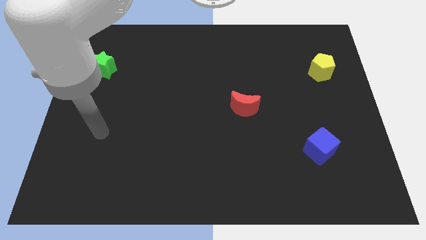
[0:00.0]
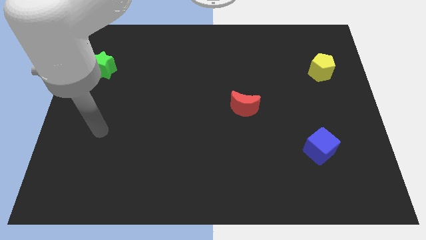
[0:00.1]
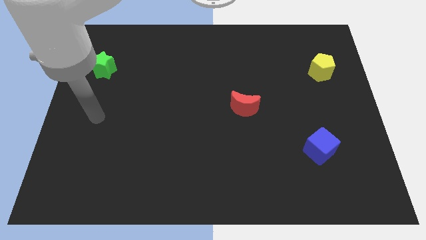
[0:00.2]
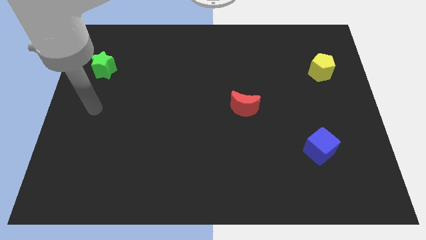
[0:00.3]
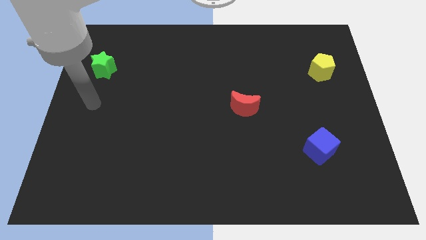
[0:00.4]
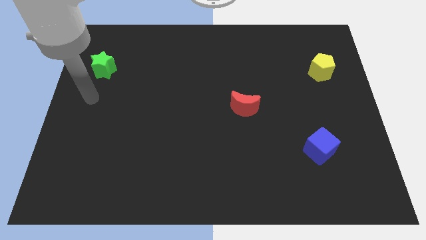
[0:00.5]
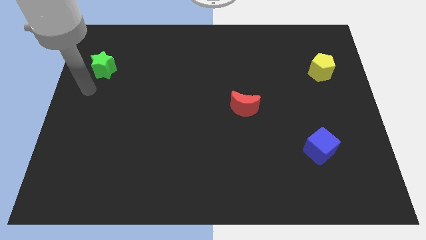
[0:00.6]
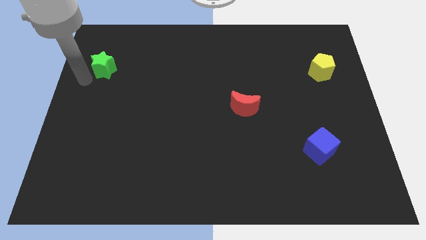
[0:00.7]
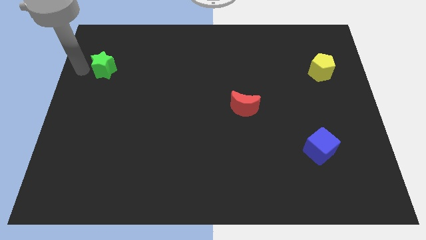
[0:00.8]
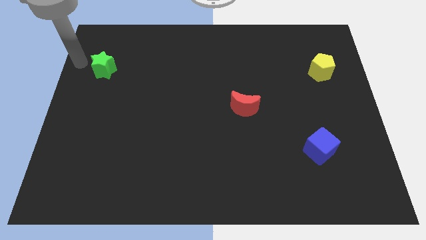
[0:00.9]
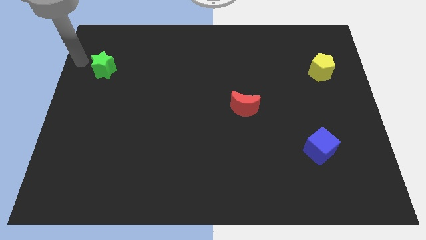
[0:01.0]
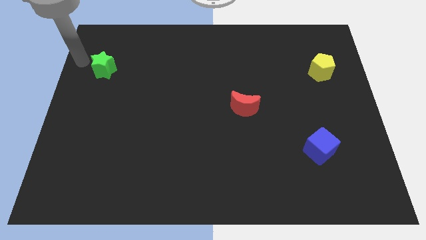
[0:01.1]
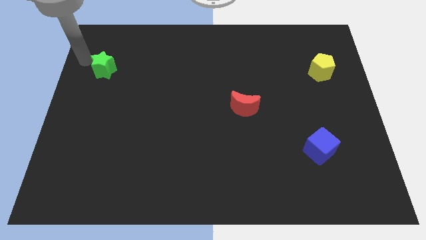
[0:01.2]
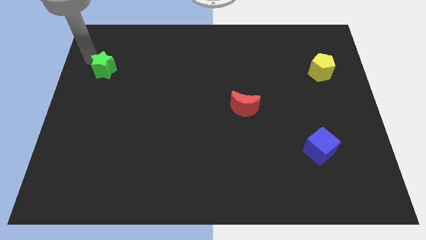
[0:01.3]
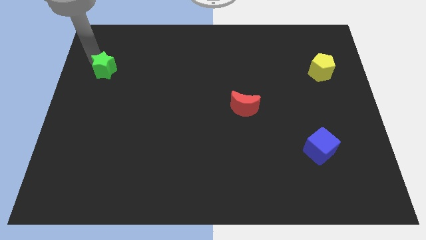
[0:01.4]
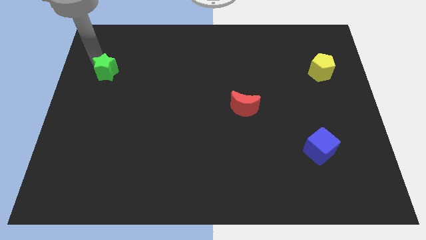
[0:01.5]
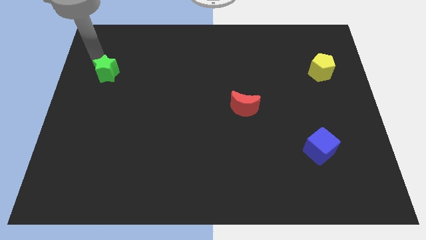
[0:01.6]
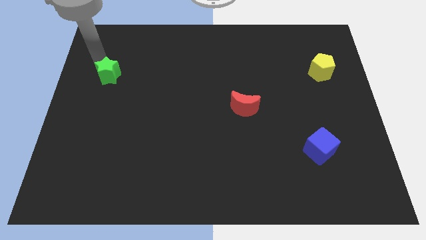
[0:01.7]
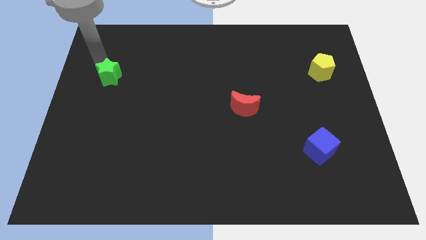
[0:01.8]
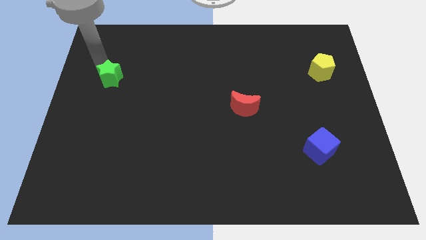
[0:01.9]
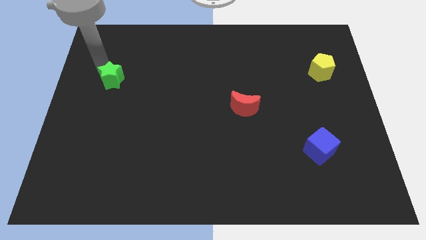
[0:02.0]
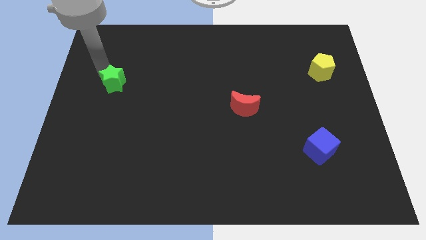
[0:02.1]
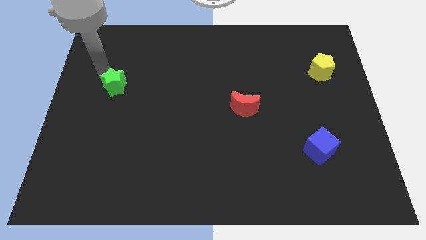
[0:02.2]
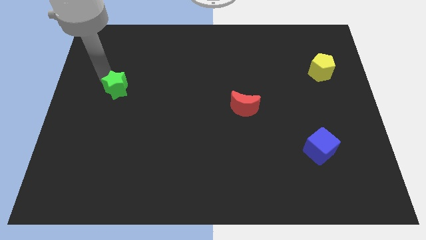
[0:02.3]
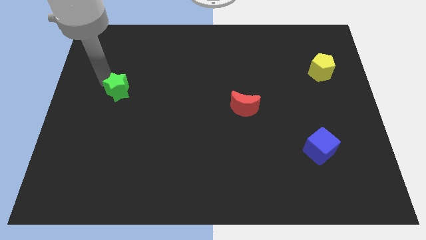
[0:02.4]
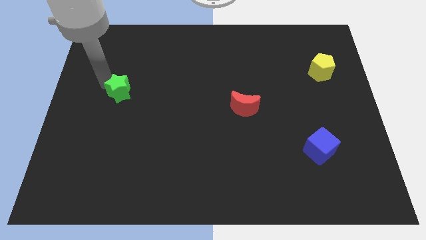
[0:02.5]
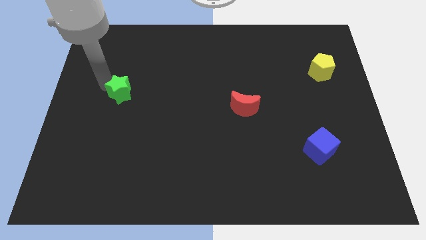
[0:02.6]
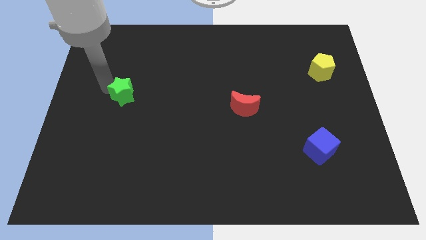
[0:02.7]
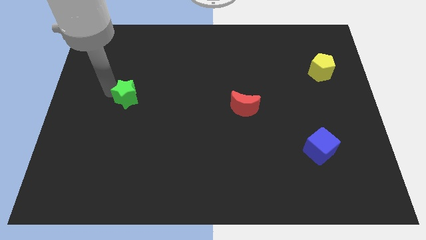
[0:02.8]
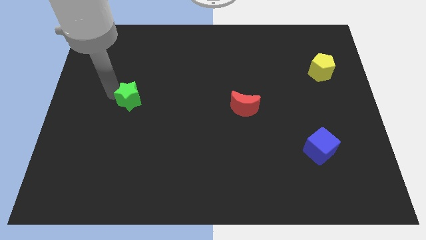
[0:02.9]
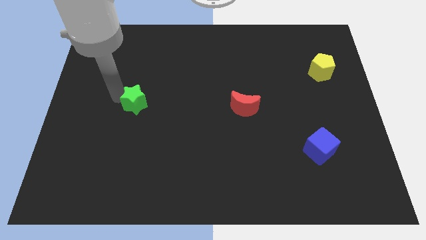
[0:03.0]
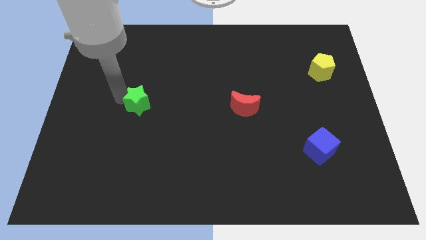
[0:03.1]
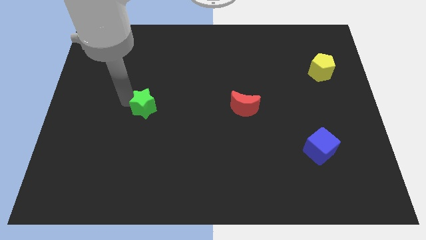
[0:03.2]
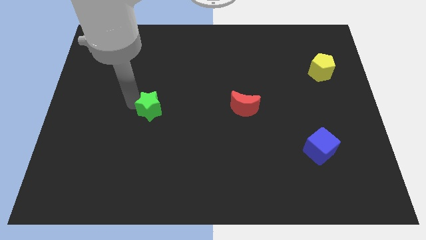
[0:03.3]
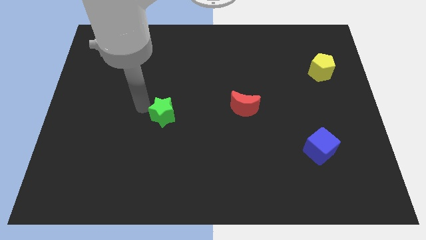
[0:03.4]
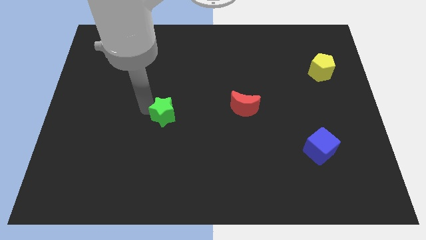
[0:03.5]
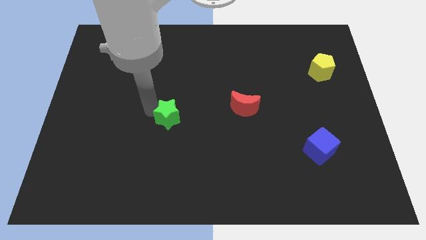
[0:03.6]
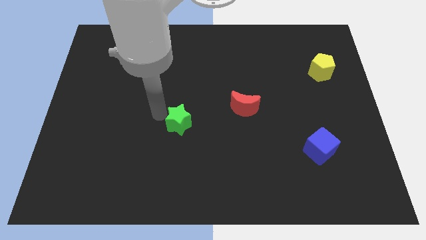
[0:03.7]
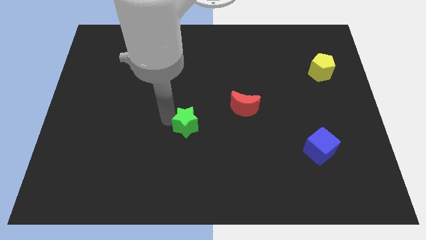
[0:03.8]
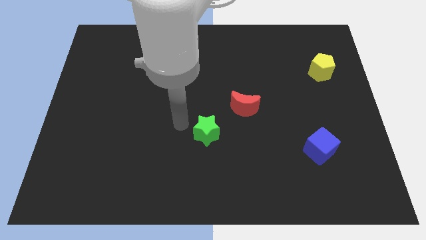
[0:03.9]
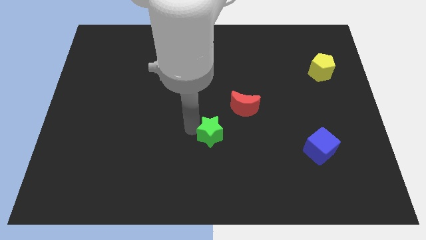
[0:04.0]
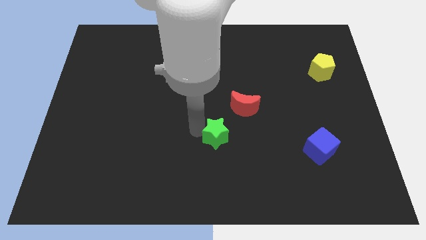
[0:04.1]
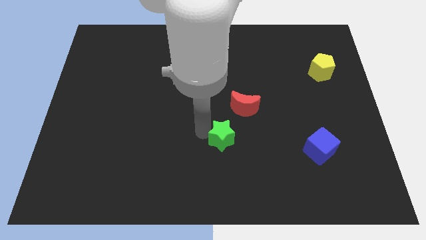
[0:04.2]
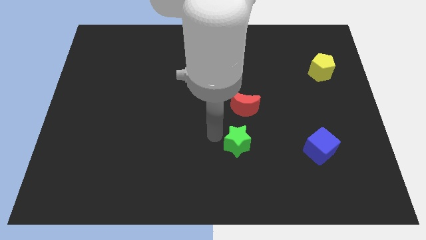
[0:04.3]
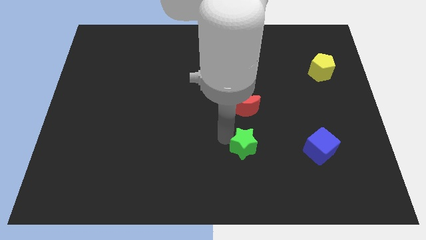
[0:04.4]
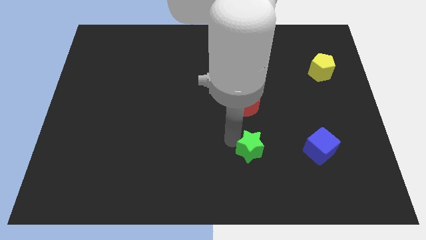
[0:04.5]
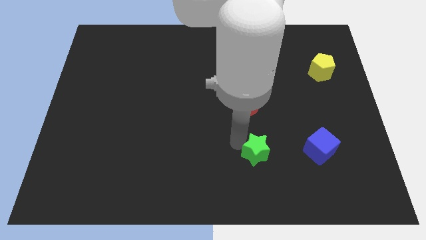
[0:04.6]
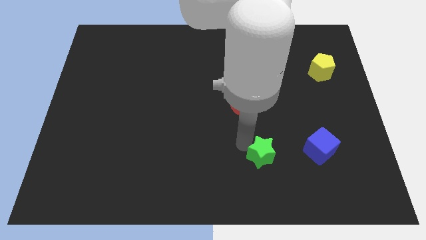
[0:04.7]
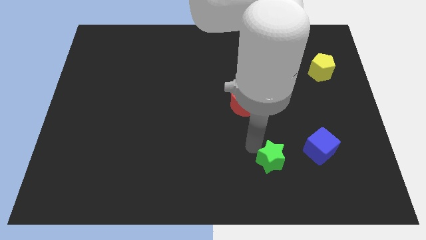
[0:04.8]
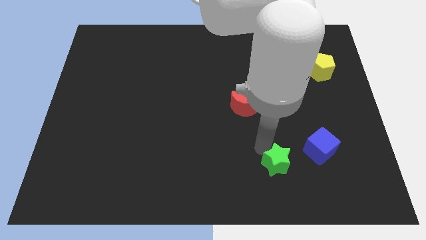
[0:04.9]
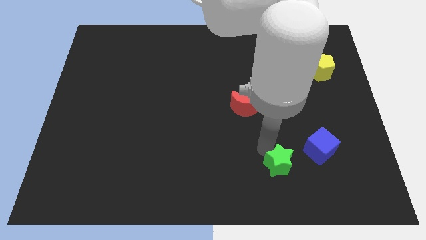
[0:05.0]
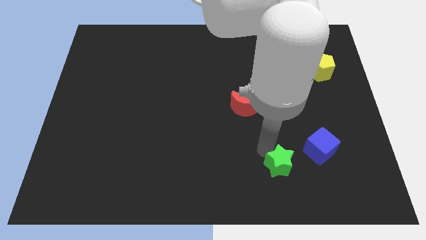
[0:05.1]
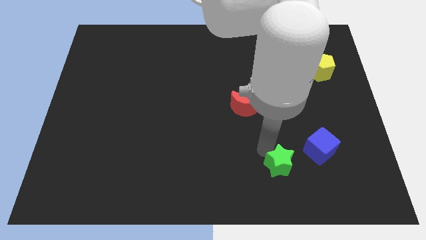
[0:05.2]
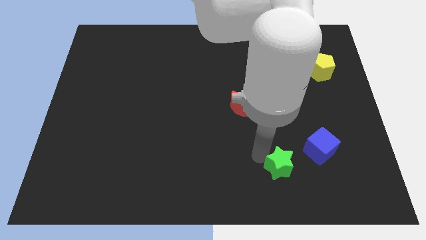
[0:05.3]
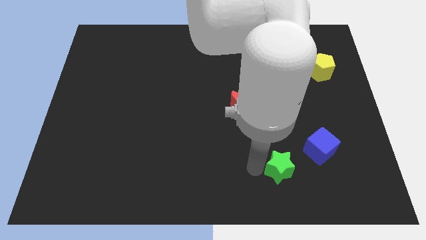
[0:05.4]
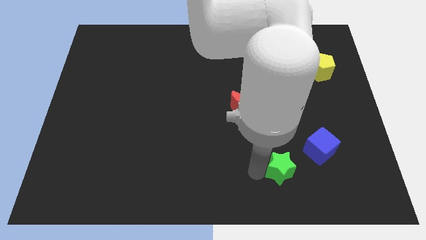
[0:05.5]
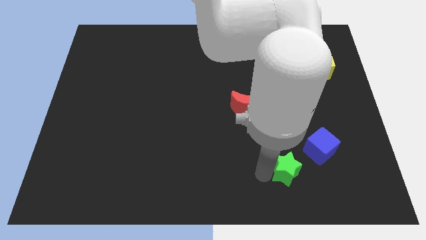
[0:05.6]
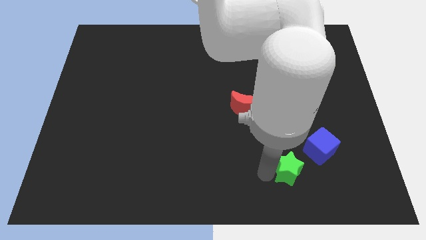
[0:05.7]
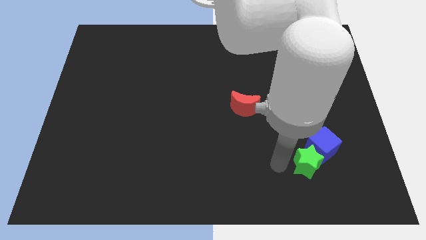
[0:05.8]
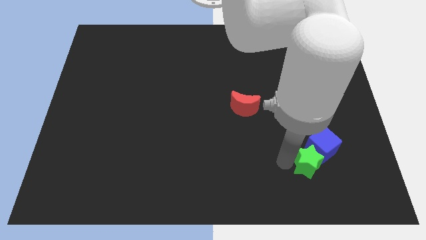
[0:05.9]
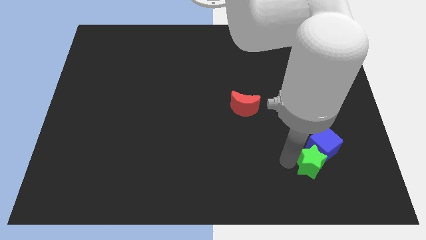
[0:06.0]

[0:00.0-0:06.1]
move the green block towards the blue block

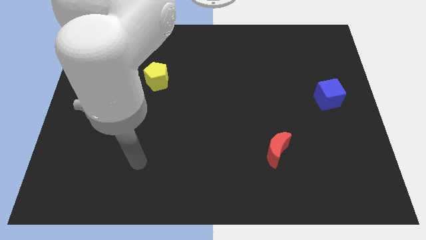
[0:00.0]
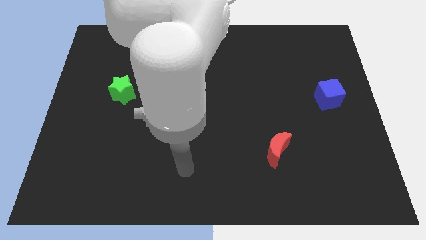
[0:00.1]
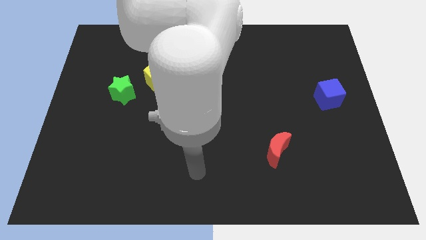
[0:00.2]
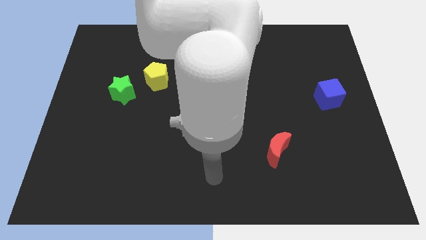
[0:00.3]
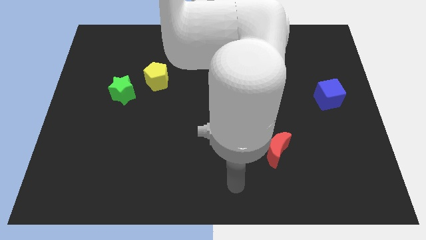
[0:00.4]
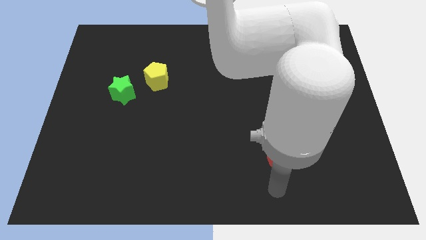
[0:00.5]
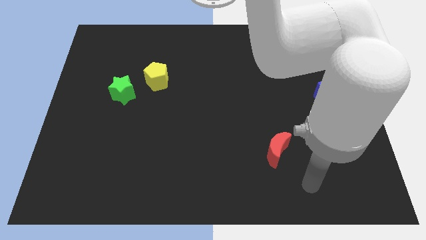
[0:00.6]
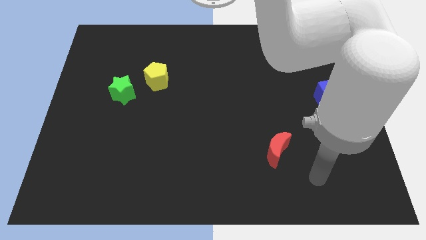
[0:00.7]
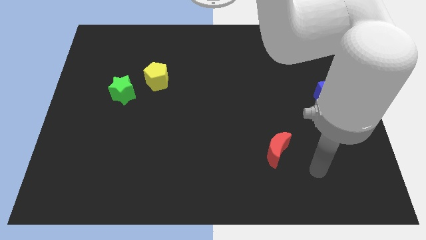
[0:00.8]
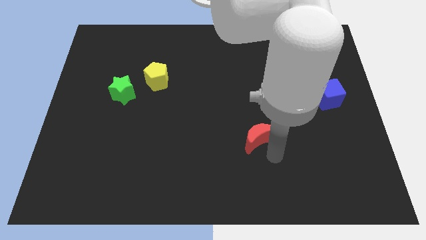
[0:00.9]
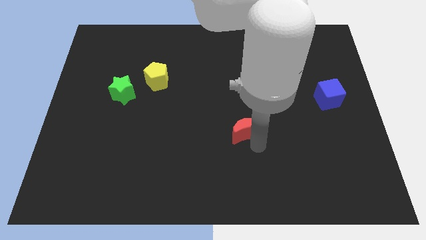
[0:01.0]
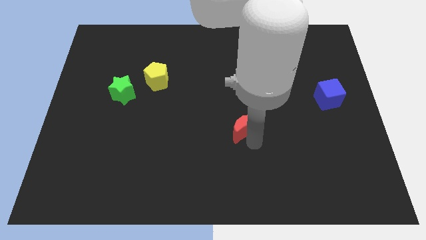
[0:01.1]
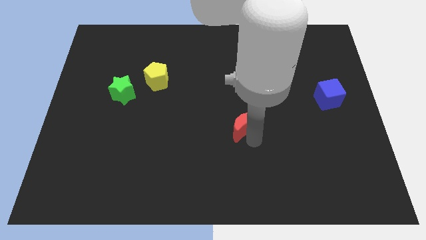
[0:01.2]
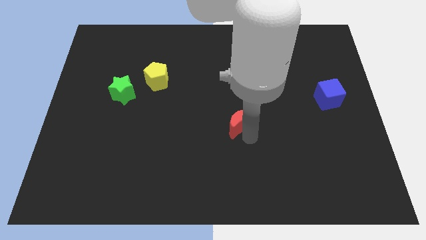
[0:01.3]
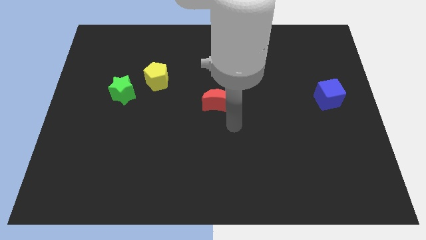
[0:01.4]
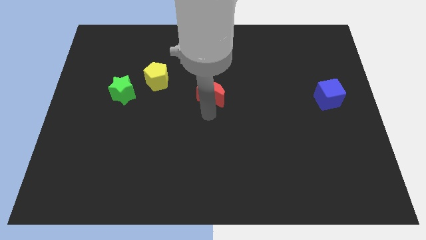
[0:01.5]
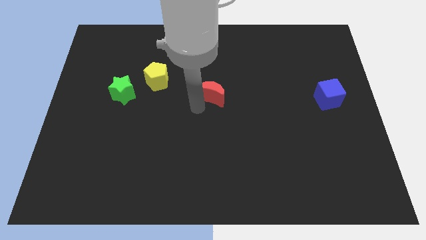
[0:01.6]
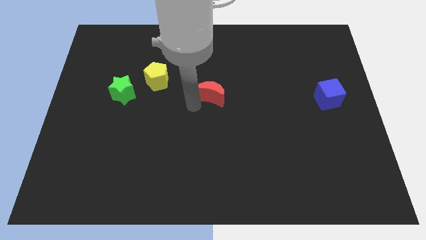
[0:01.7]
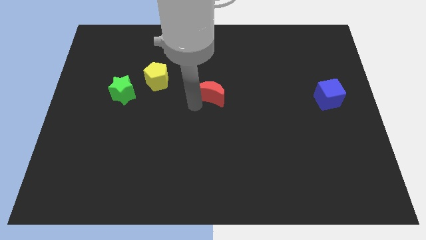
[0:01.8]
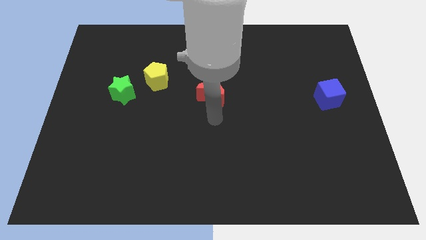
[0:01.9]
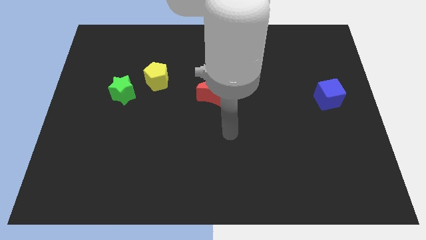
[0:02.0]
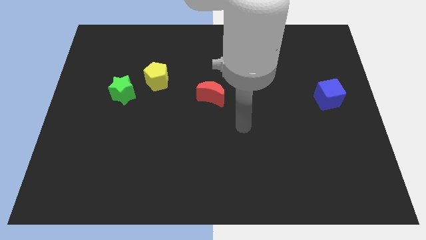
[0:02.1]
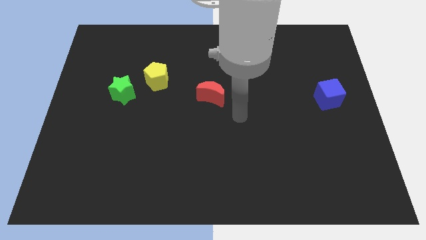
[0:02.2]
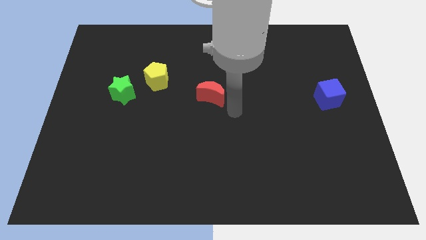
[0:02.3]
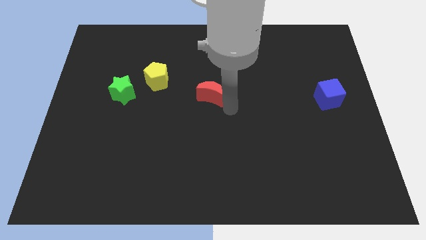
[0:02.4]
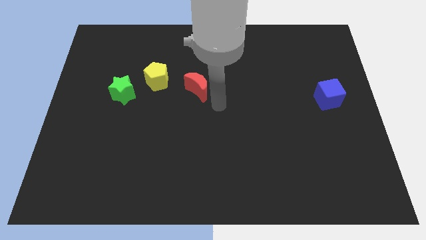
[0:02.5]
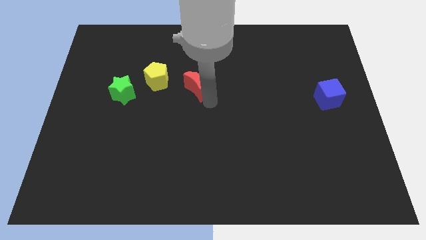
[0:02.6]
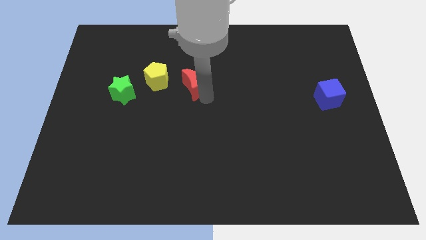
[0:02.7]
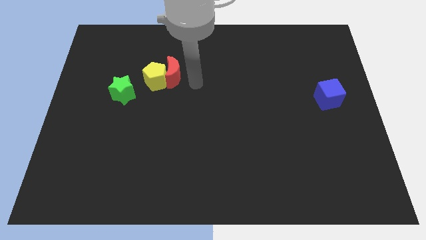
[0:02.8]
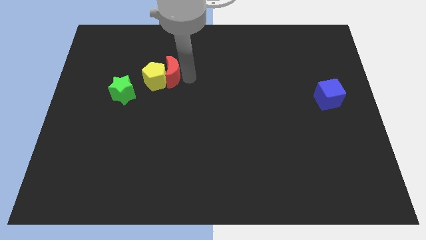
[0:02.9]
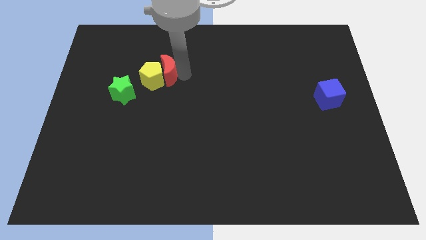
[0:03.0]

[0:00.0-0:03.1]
put the red block to the yellow block
